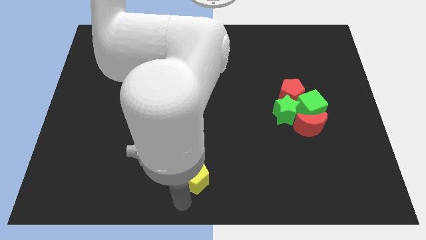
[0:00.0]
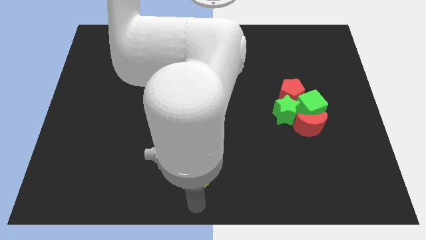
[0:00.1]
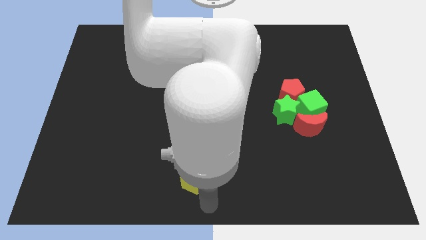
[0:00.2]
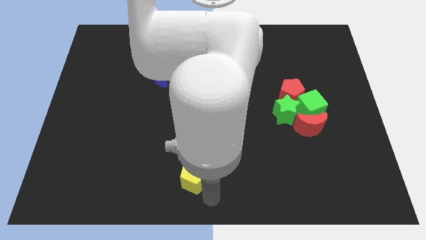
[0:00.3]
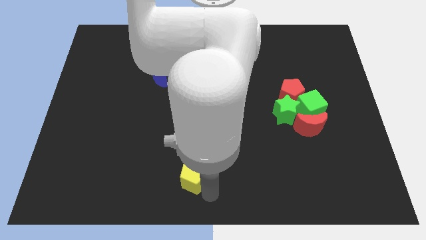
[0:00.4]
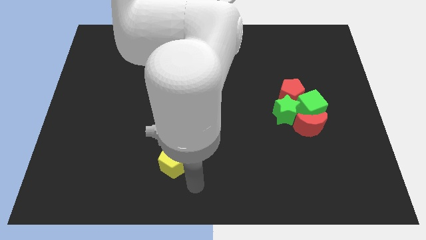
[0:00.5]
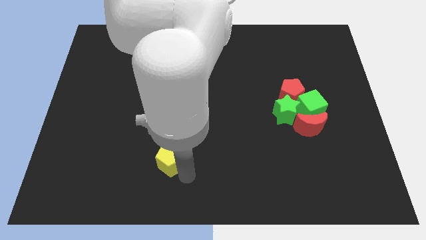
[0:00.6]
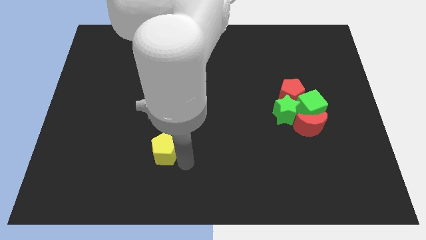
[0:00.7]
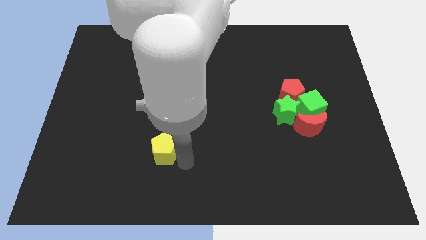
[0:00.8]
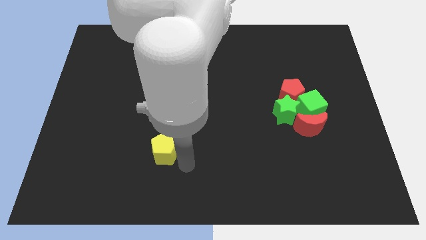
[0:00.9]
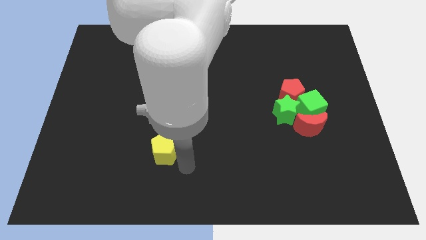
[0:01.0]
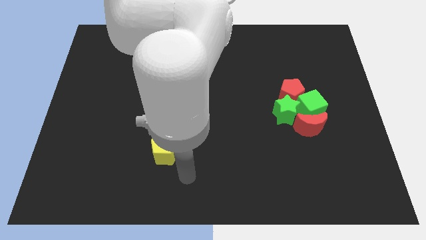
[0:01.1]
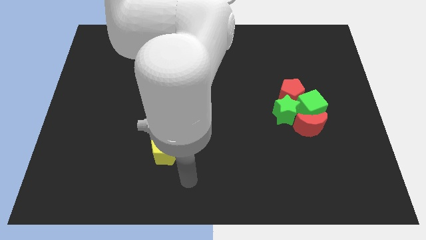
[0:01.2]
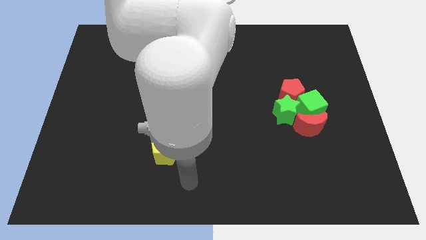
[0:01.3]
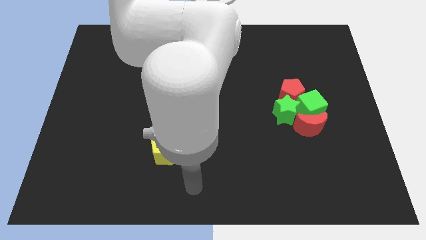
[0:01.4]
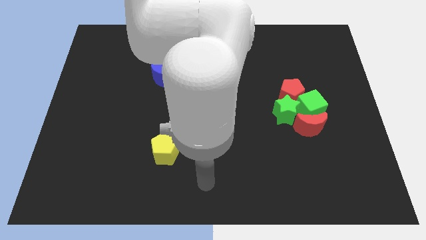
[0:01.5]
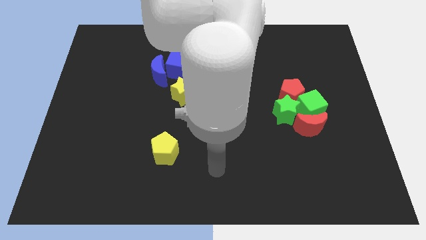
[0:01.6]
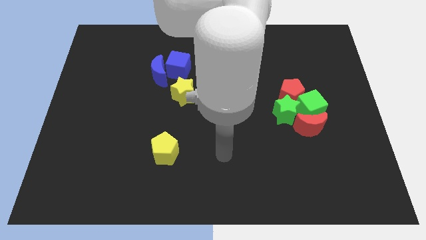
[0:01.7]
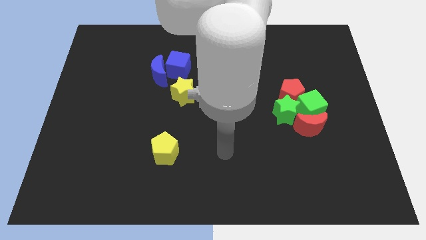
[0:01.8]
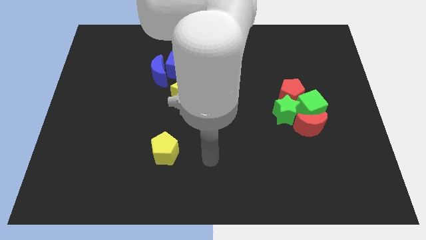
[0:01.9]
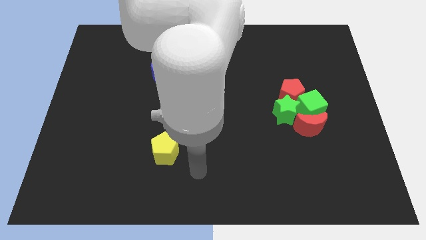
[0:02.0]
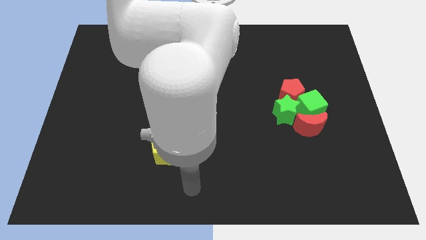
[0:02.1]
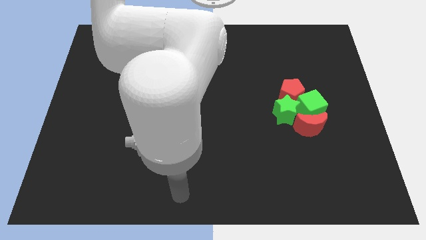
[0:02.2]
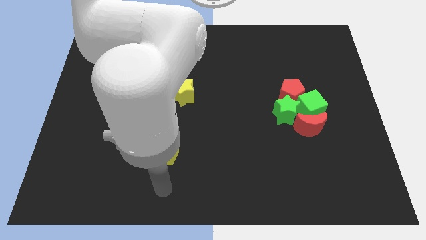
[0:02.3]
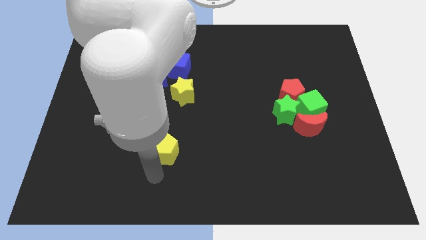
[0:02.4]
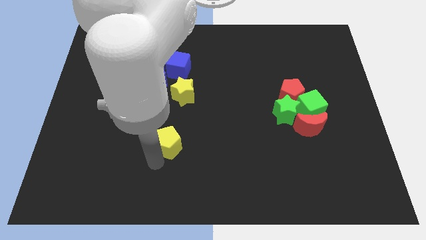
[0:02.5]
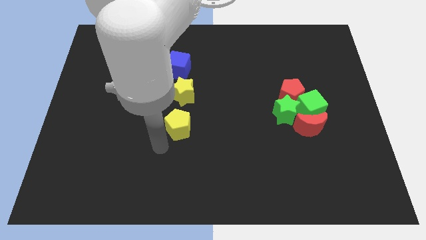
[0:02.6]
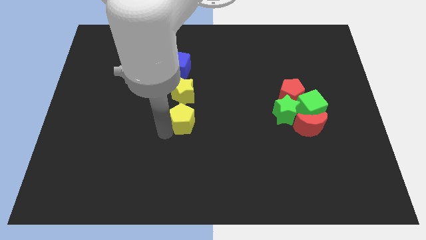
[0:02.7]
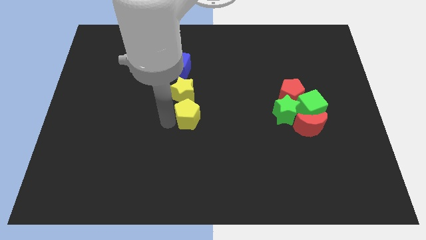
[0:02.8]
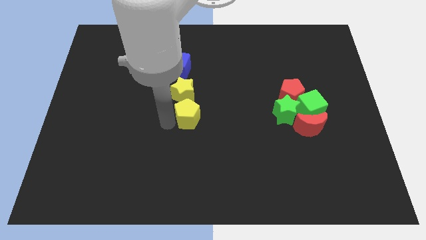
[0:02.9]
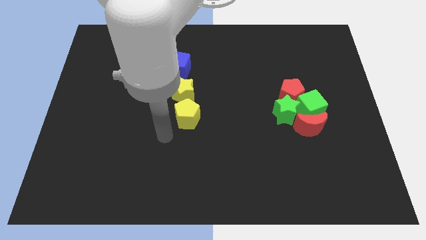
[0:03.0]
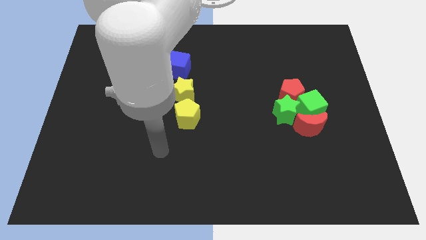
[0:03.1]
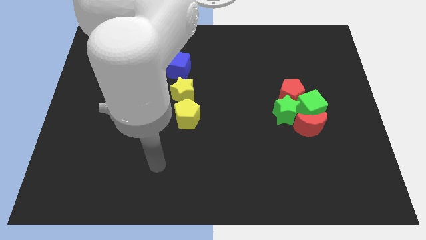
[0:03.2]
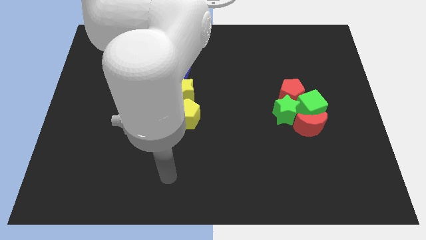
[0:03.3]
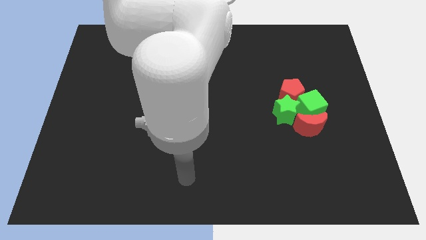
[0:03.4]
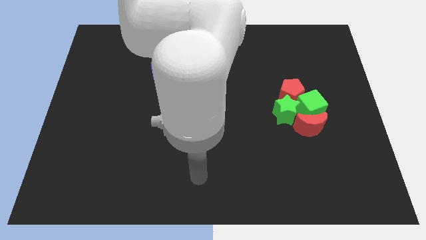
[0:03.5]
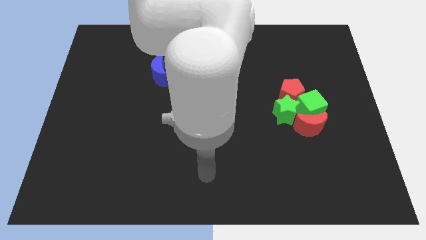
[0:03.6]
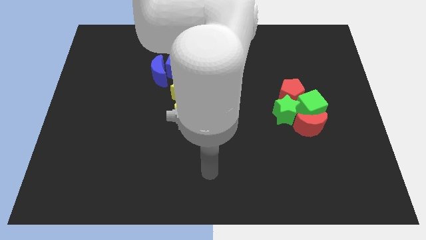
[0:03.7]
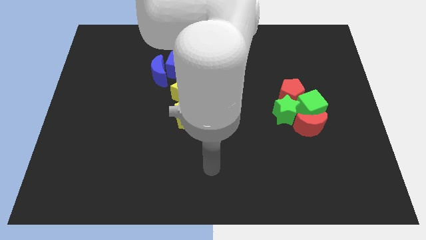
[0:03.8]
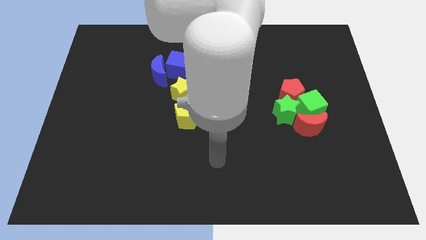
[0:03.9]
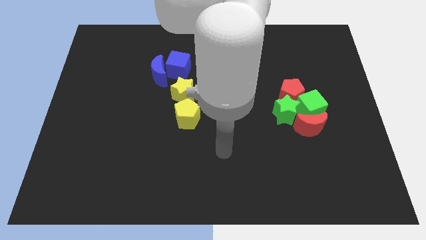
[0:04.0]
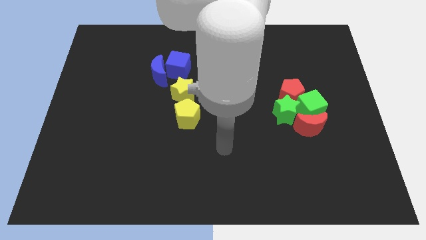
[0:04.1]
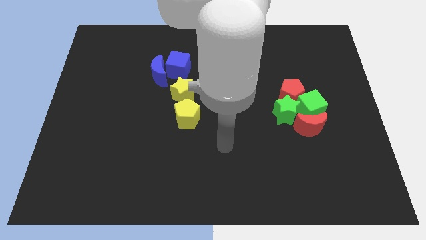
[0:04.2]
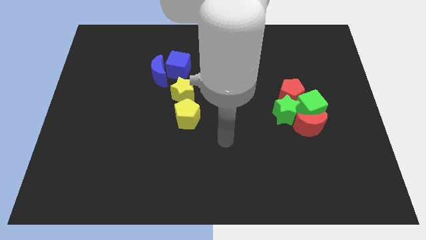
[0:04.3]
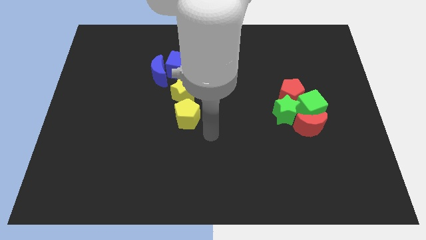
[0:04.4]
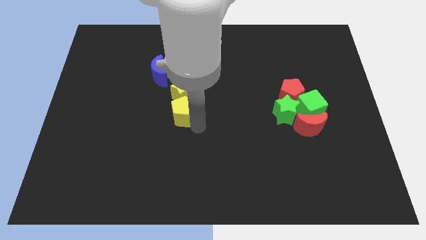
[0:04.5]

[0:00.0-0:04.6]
place the yellow pentagon vertically below the yellow star

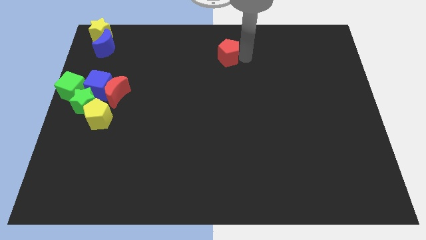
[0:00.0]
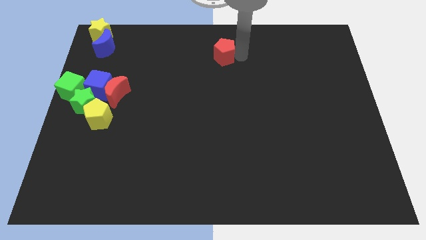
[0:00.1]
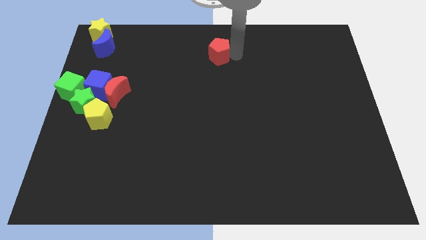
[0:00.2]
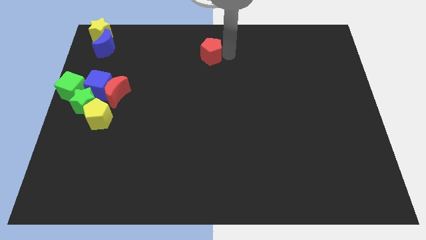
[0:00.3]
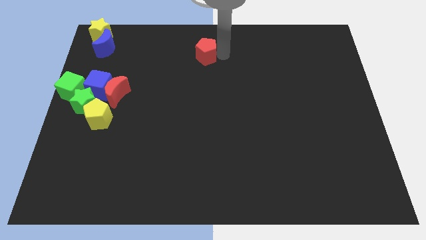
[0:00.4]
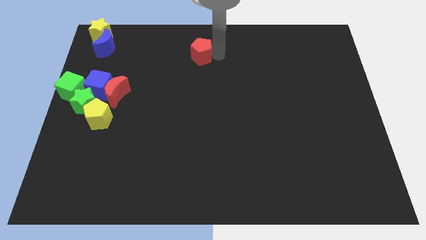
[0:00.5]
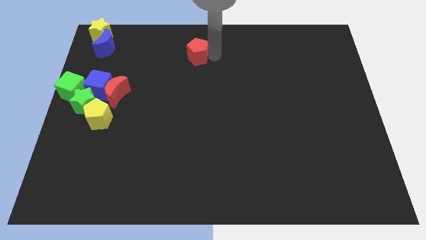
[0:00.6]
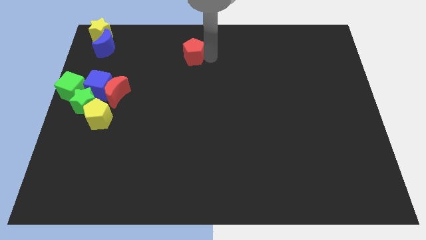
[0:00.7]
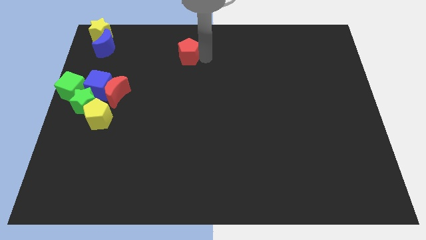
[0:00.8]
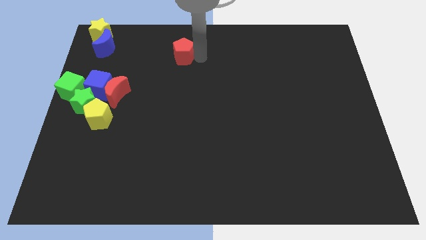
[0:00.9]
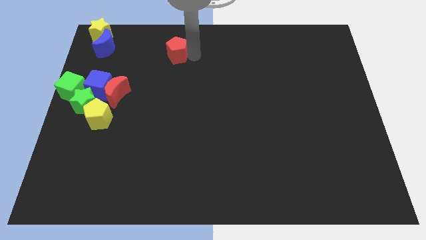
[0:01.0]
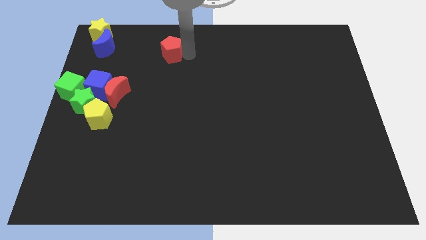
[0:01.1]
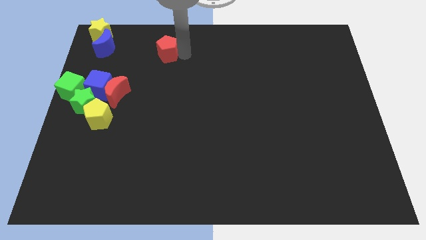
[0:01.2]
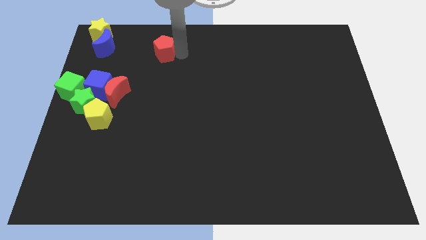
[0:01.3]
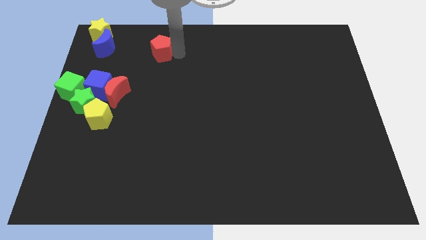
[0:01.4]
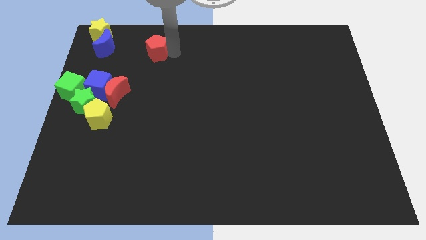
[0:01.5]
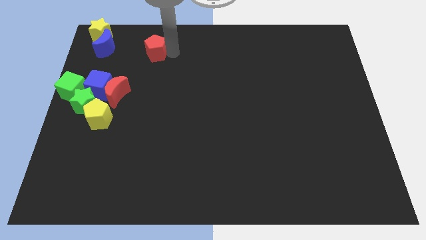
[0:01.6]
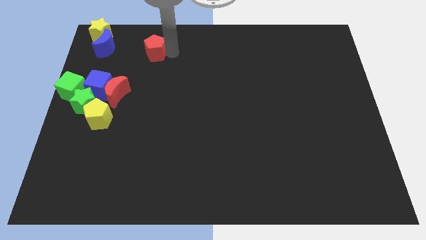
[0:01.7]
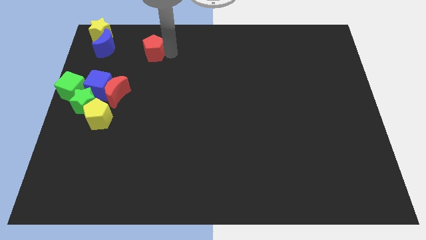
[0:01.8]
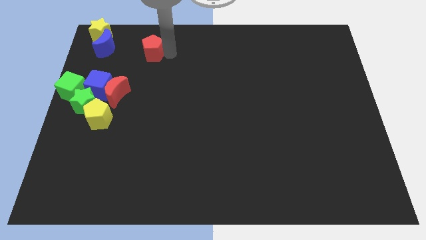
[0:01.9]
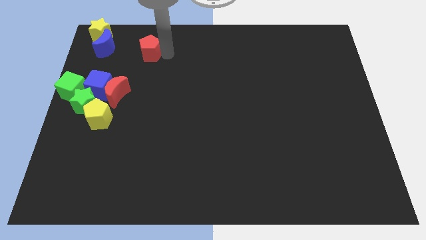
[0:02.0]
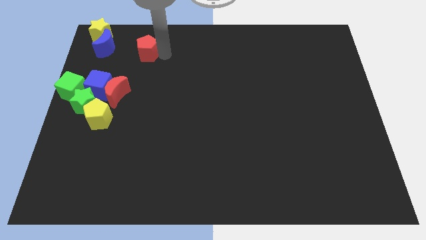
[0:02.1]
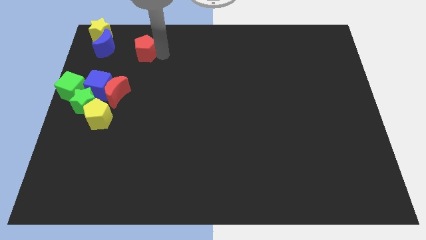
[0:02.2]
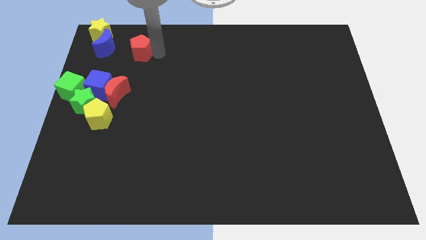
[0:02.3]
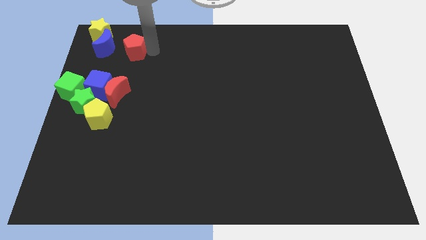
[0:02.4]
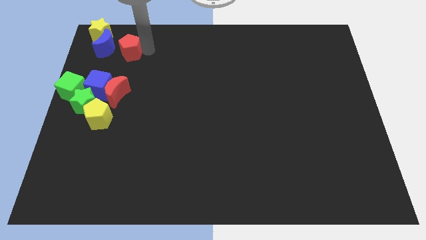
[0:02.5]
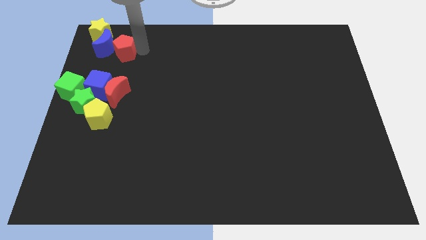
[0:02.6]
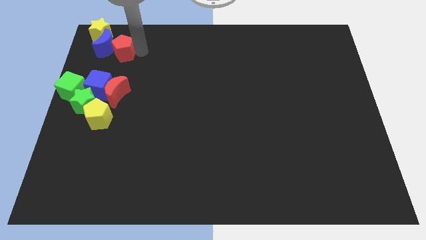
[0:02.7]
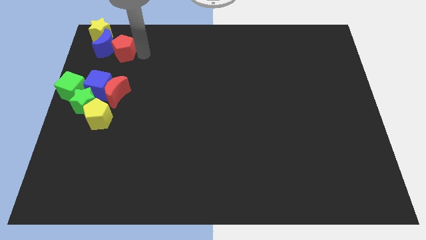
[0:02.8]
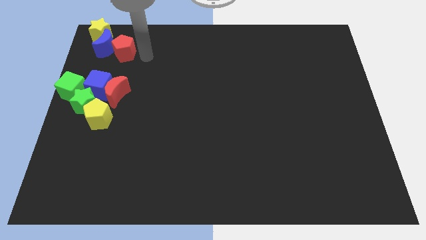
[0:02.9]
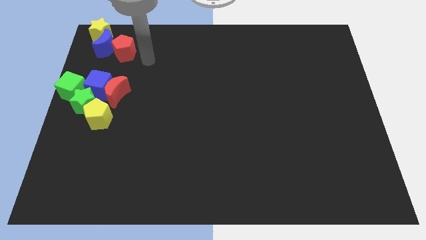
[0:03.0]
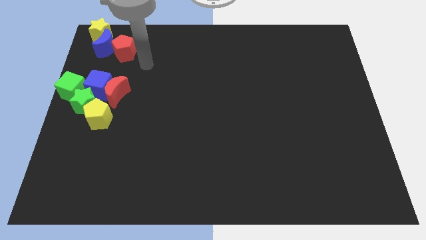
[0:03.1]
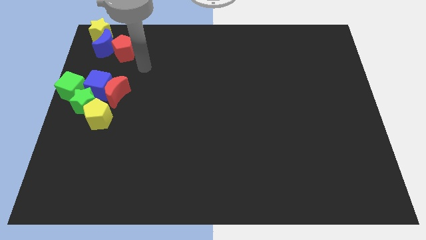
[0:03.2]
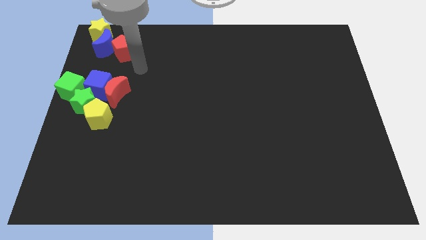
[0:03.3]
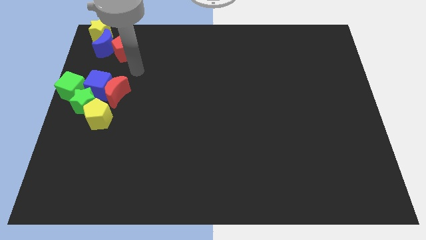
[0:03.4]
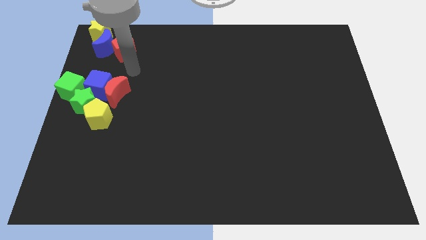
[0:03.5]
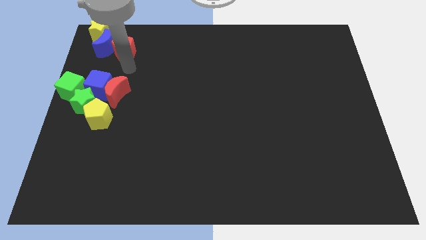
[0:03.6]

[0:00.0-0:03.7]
move the red pentagon to the right of blue crescent to the top left of the board

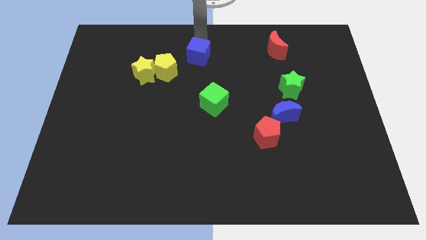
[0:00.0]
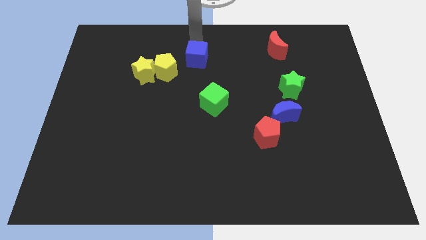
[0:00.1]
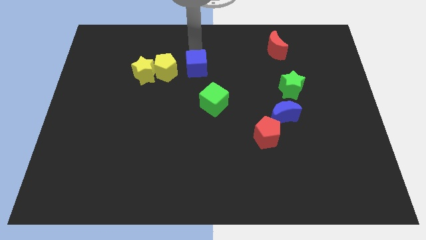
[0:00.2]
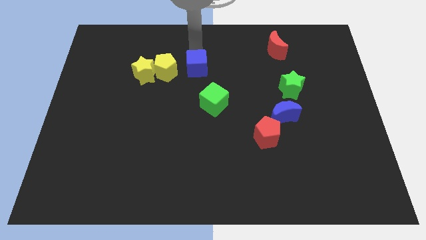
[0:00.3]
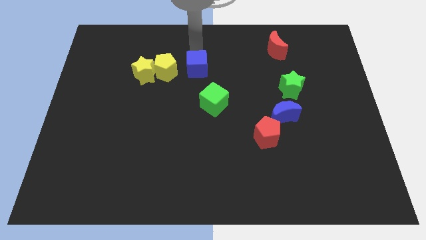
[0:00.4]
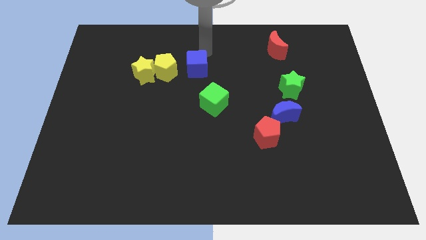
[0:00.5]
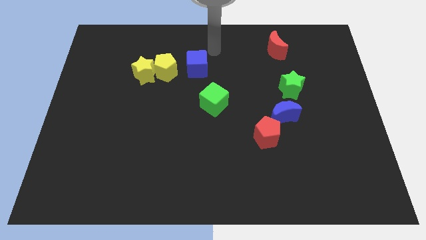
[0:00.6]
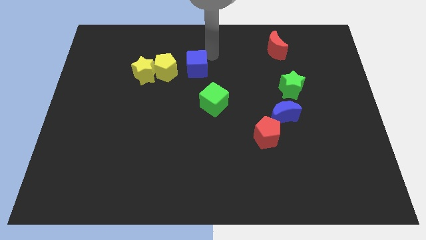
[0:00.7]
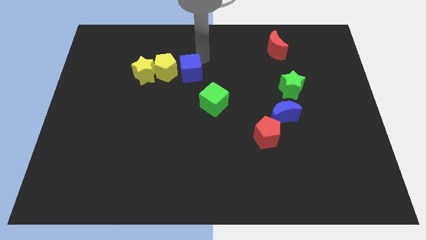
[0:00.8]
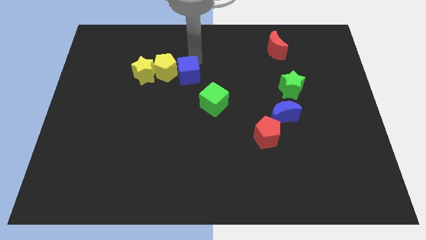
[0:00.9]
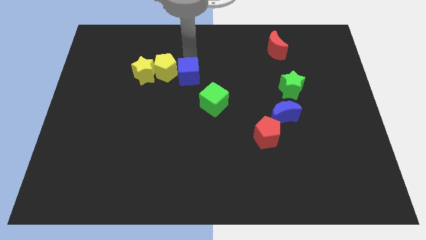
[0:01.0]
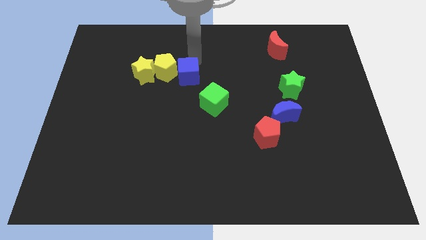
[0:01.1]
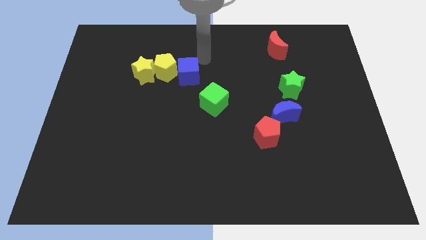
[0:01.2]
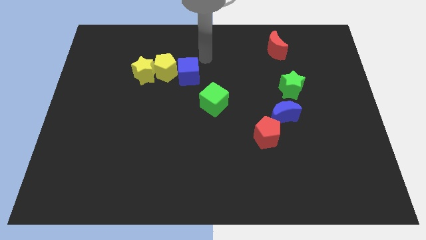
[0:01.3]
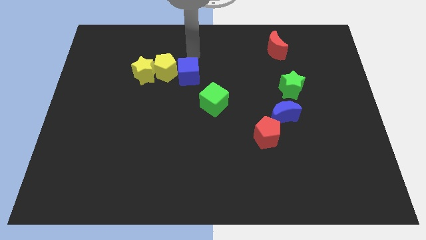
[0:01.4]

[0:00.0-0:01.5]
place the blue cube to the right of the yellow pentagon
